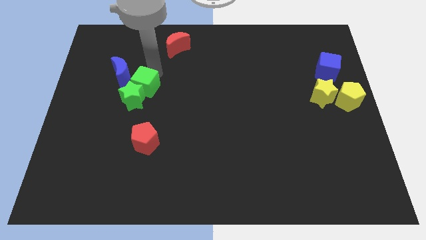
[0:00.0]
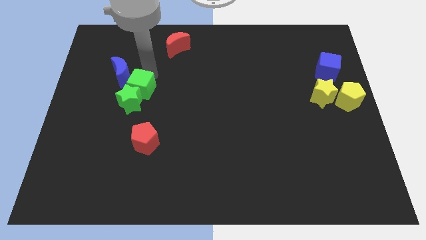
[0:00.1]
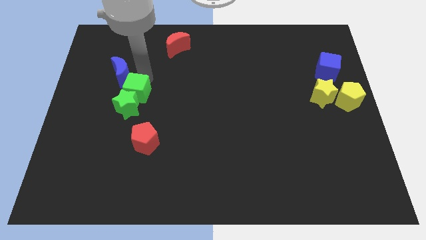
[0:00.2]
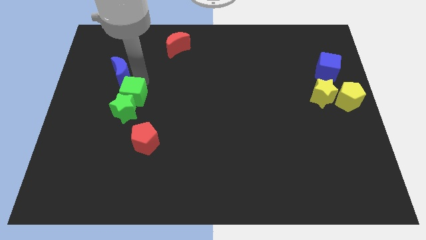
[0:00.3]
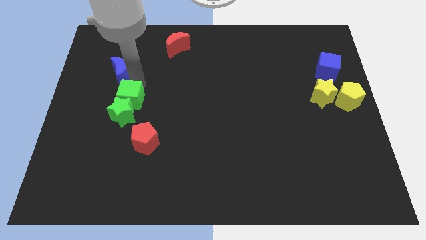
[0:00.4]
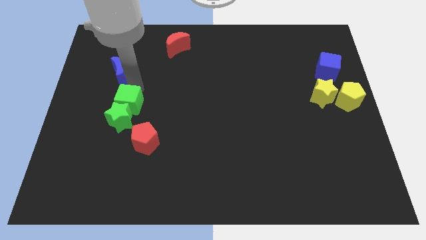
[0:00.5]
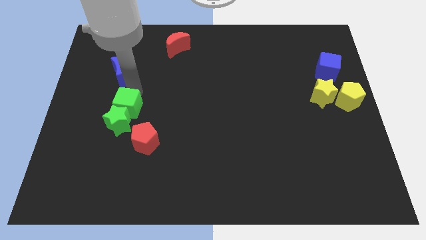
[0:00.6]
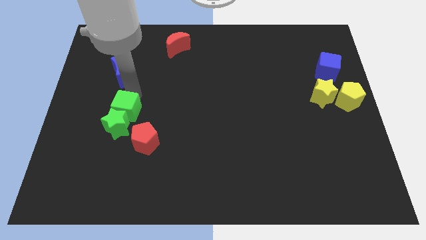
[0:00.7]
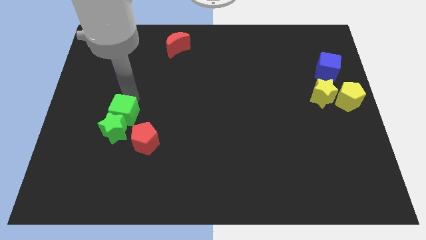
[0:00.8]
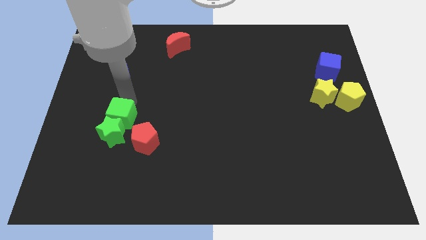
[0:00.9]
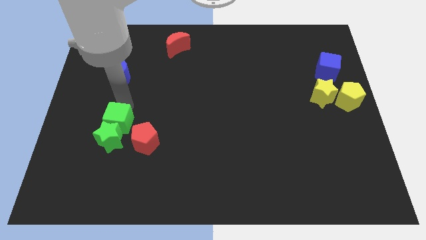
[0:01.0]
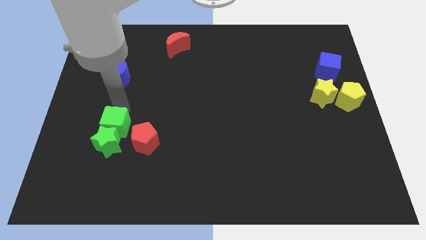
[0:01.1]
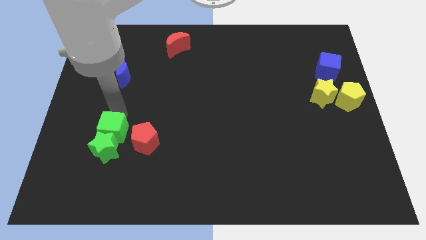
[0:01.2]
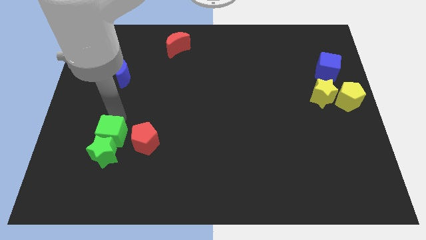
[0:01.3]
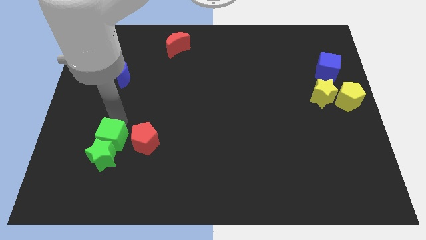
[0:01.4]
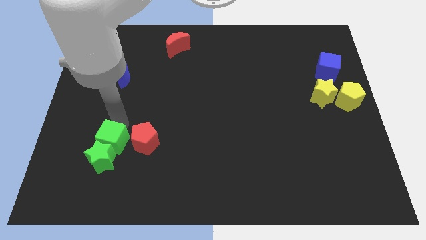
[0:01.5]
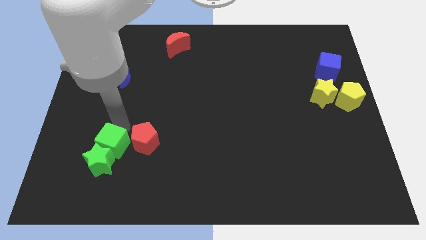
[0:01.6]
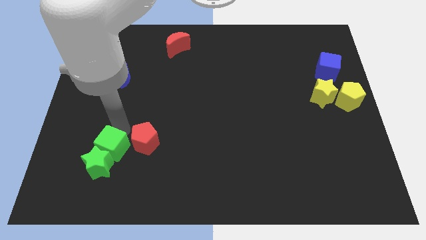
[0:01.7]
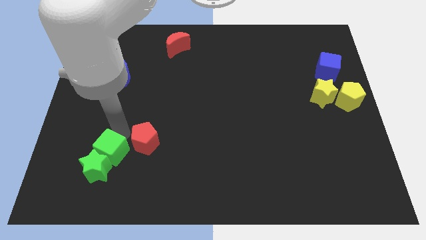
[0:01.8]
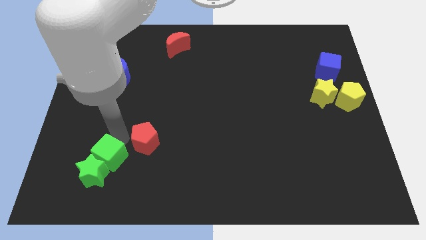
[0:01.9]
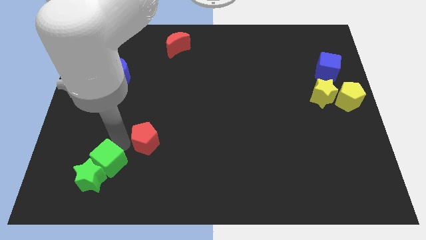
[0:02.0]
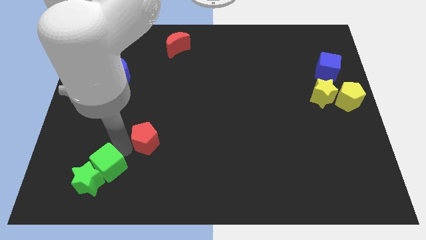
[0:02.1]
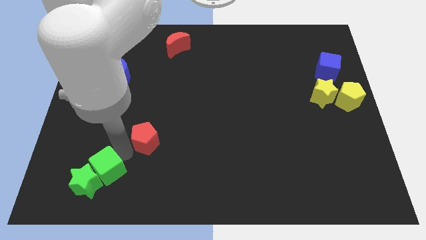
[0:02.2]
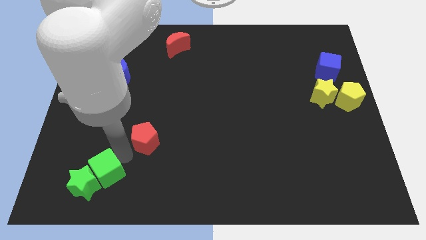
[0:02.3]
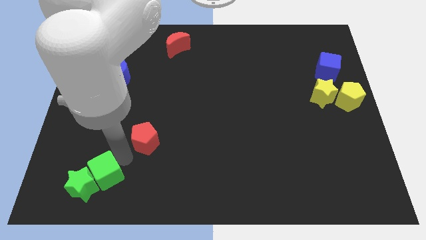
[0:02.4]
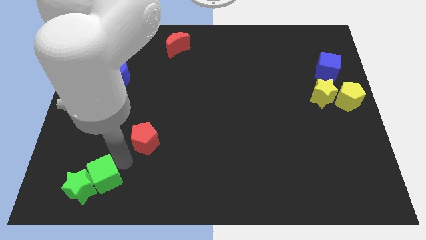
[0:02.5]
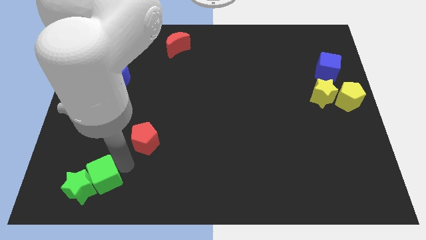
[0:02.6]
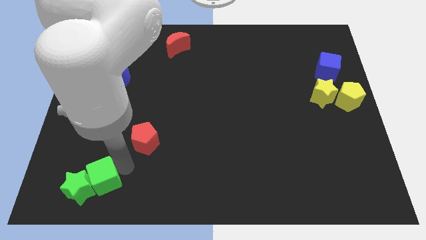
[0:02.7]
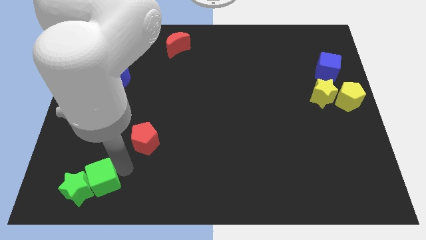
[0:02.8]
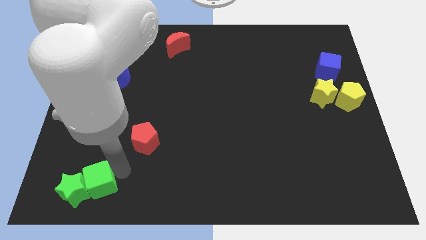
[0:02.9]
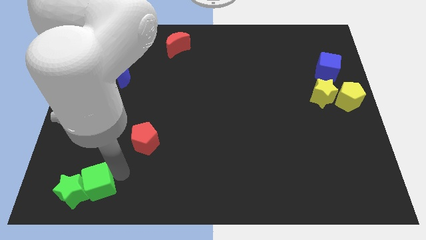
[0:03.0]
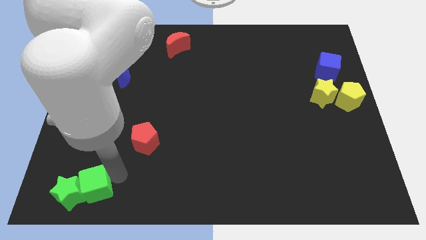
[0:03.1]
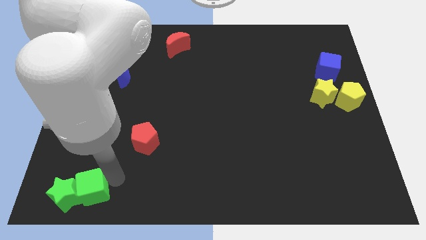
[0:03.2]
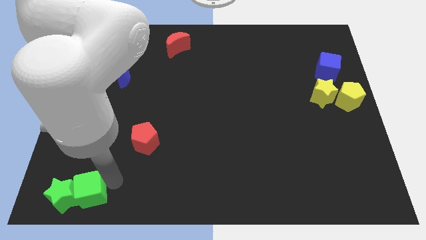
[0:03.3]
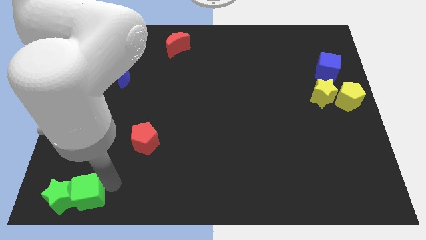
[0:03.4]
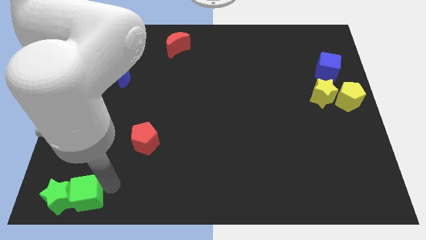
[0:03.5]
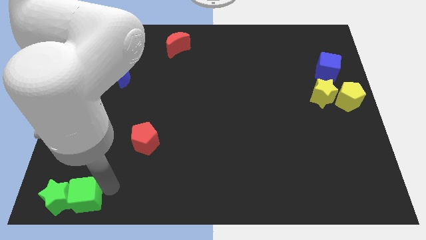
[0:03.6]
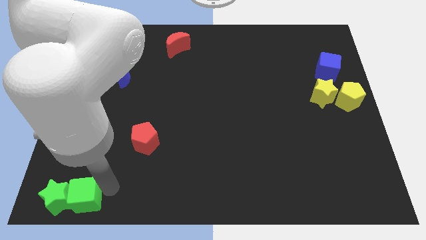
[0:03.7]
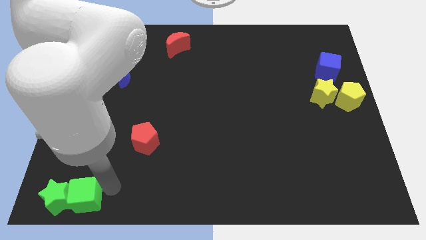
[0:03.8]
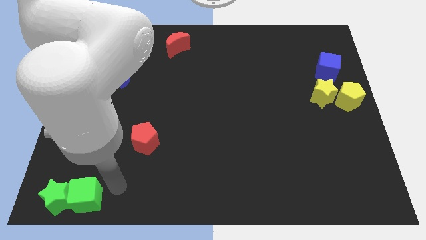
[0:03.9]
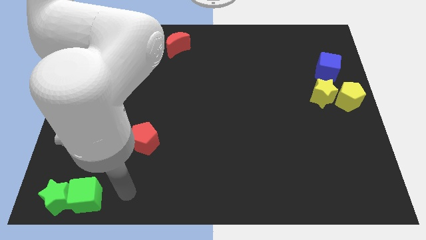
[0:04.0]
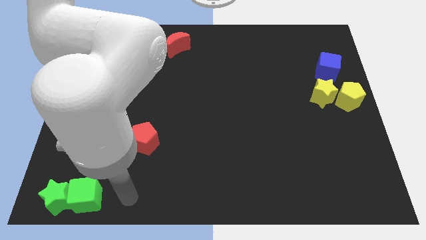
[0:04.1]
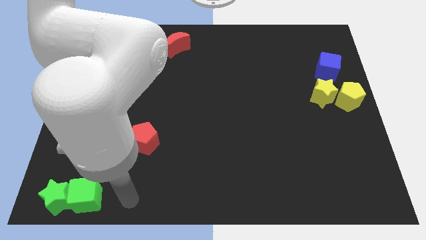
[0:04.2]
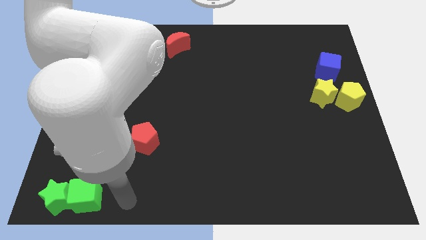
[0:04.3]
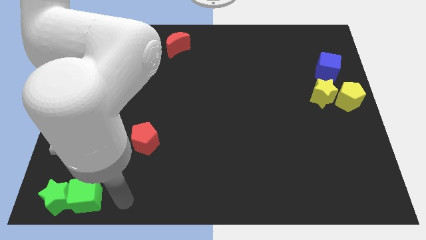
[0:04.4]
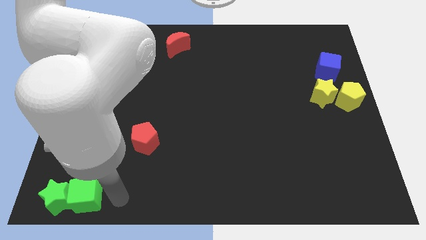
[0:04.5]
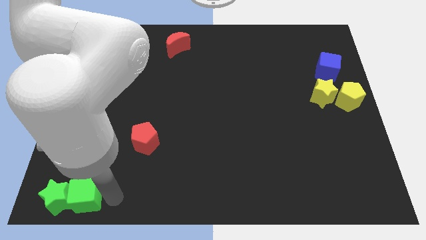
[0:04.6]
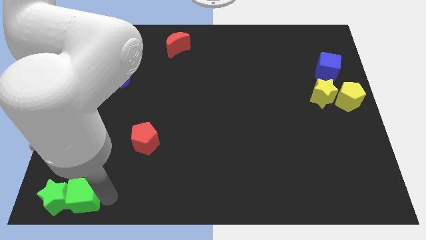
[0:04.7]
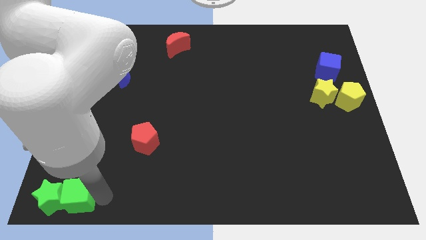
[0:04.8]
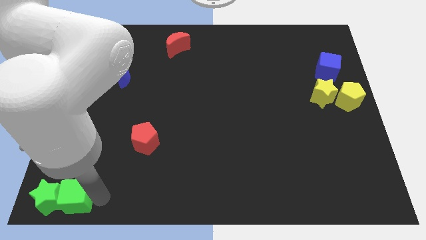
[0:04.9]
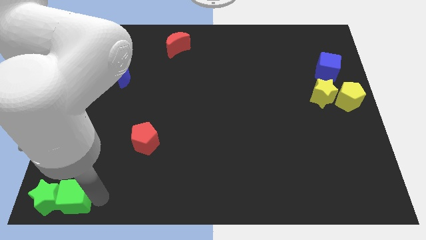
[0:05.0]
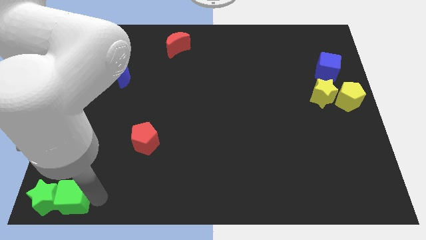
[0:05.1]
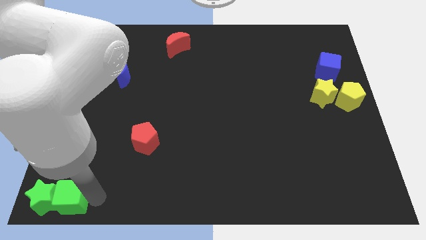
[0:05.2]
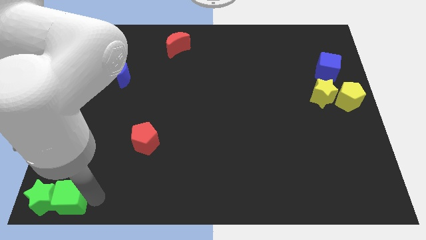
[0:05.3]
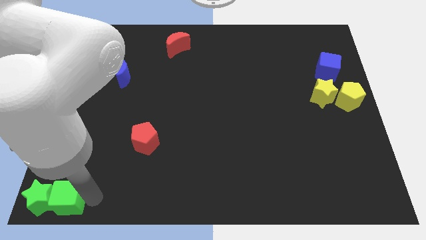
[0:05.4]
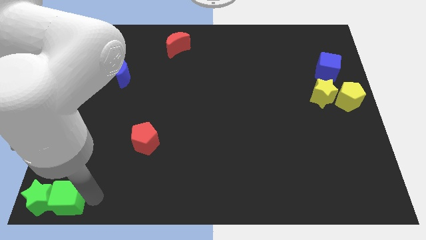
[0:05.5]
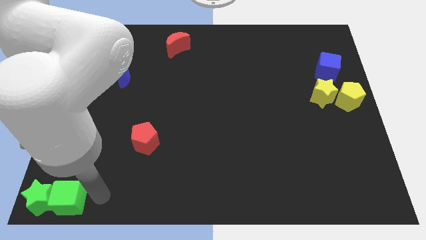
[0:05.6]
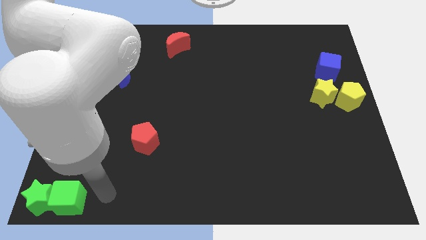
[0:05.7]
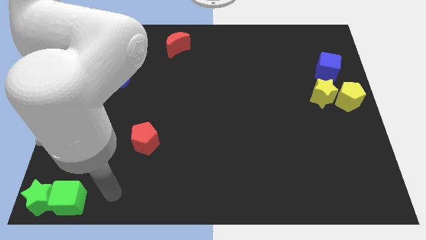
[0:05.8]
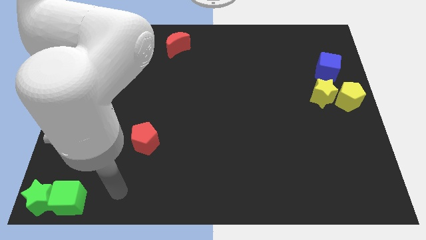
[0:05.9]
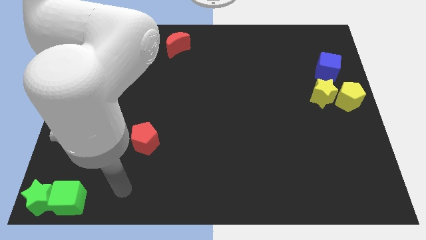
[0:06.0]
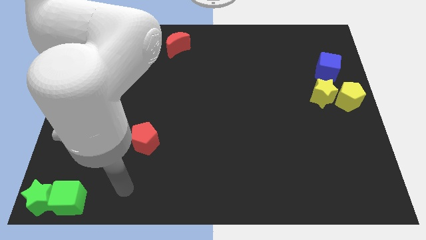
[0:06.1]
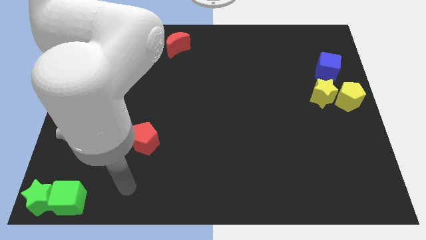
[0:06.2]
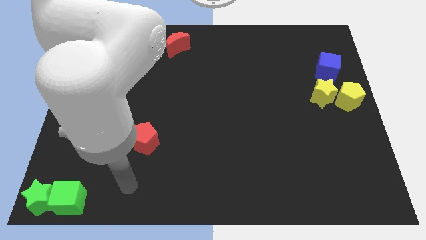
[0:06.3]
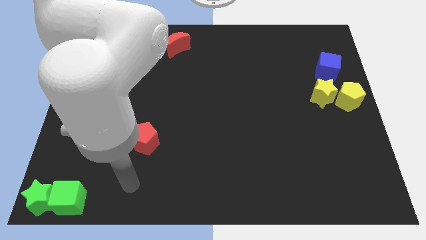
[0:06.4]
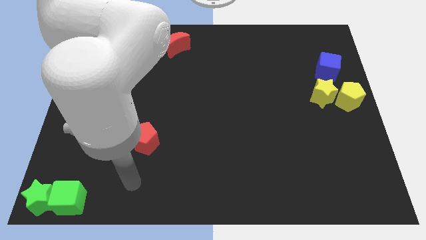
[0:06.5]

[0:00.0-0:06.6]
push the green star along with the green cube to the bottom left corner

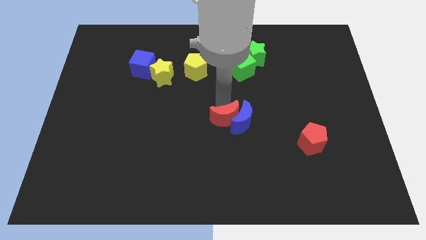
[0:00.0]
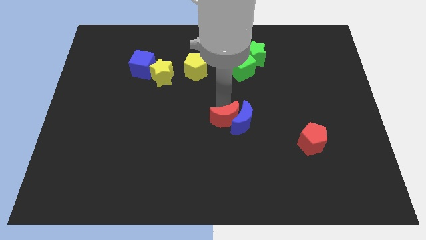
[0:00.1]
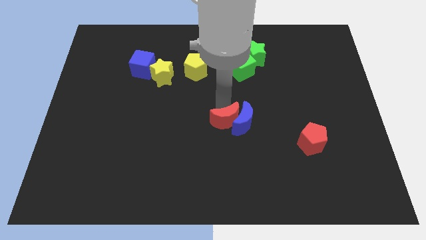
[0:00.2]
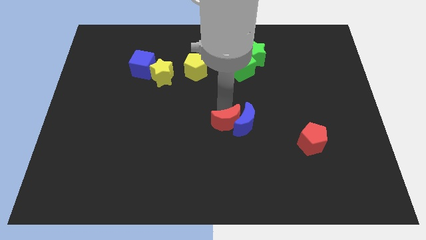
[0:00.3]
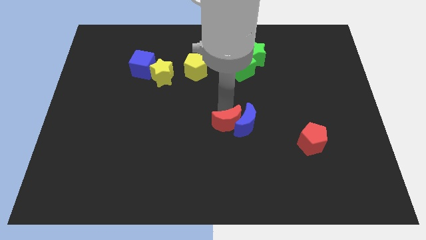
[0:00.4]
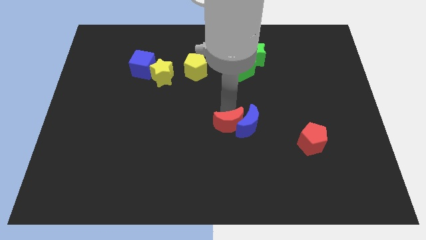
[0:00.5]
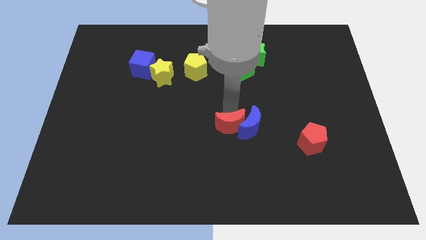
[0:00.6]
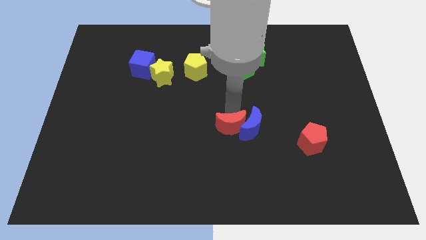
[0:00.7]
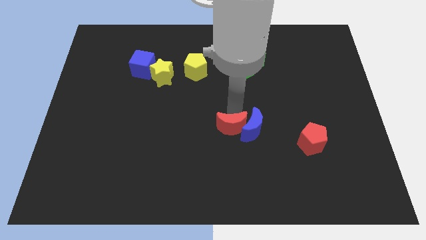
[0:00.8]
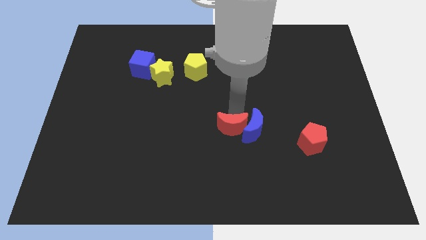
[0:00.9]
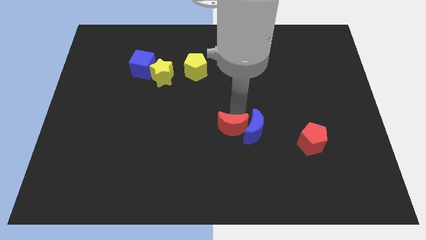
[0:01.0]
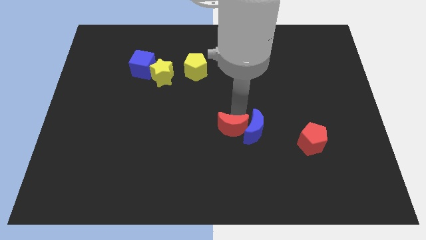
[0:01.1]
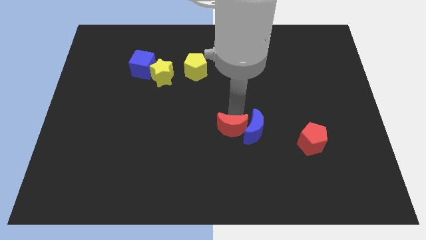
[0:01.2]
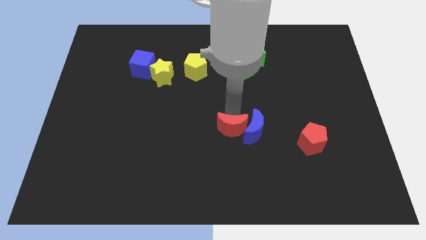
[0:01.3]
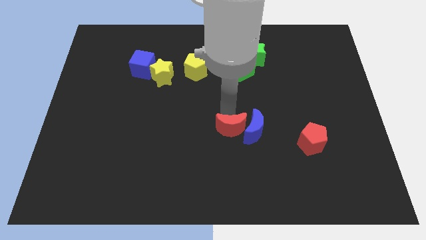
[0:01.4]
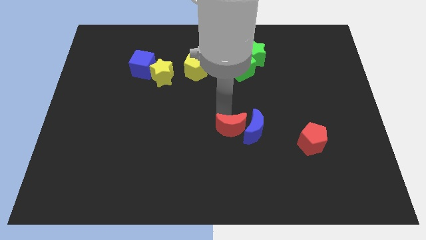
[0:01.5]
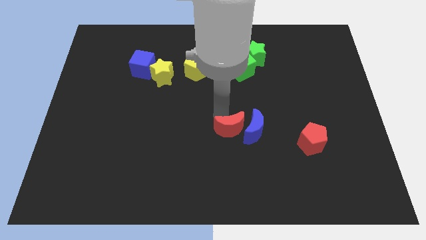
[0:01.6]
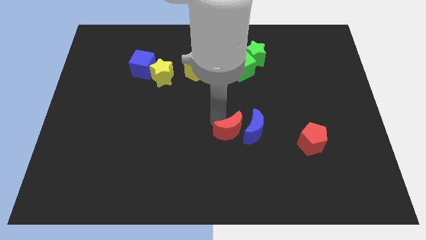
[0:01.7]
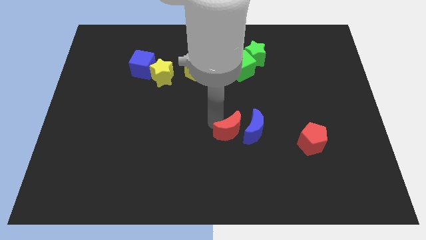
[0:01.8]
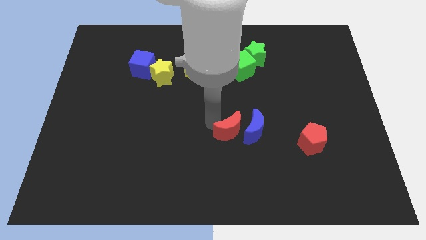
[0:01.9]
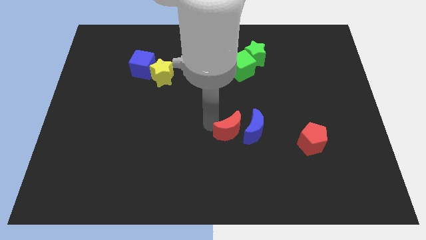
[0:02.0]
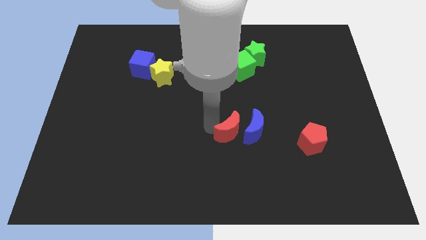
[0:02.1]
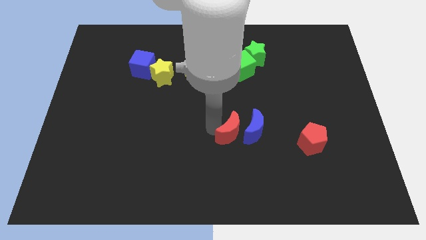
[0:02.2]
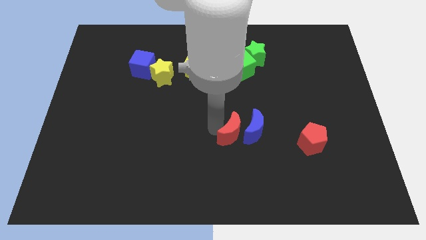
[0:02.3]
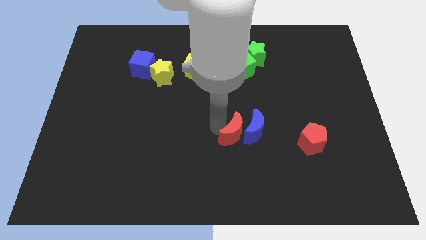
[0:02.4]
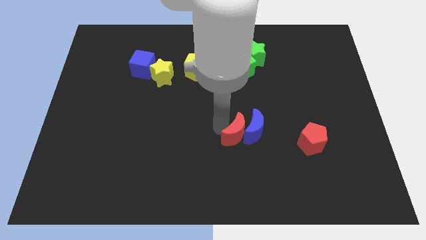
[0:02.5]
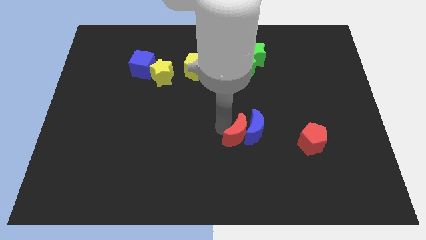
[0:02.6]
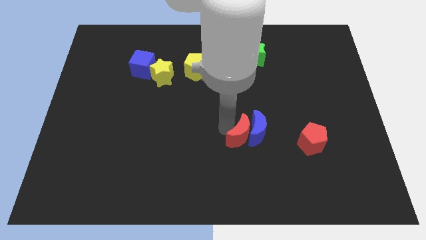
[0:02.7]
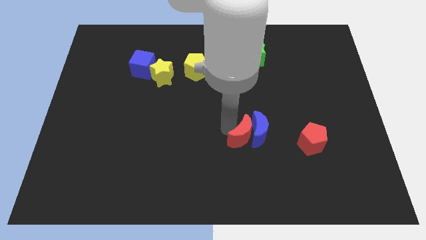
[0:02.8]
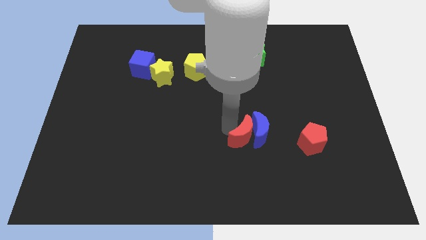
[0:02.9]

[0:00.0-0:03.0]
slightly push the blue crescent with the red crescent towards the right of the board
